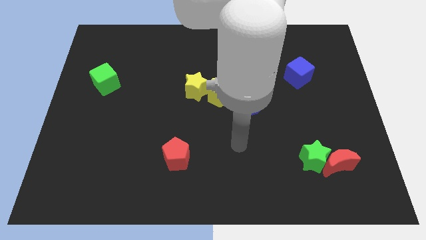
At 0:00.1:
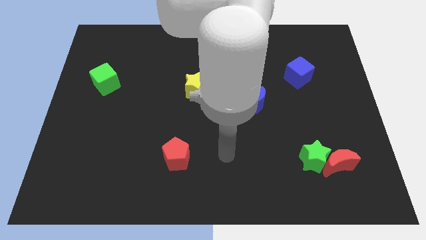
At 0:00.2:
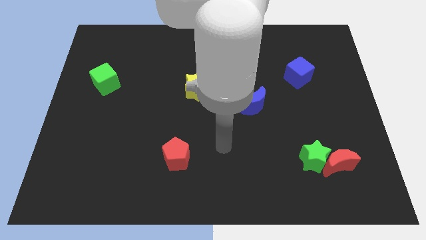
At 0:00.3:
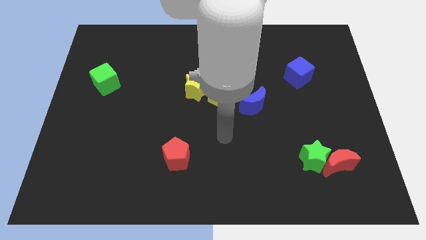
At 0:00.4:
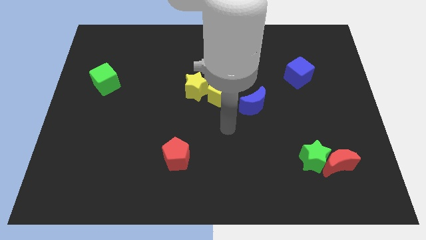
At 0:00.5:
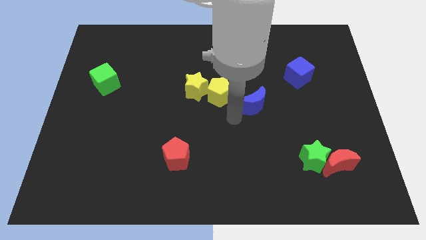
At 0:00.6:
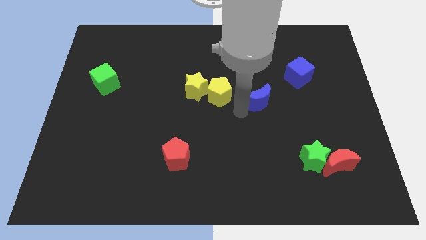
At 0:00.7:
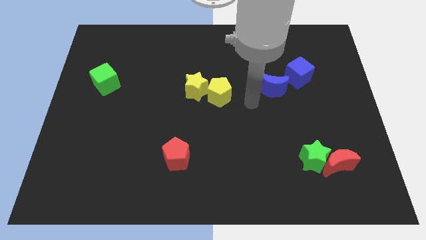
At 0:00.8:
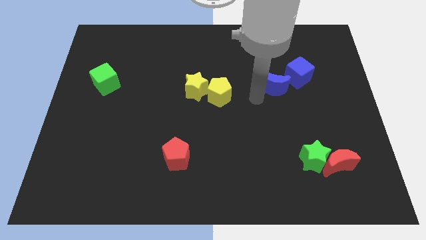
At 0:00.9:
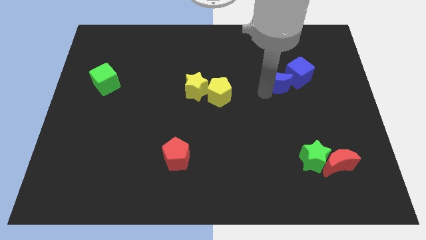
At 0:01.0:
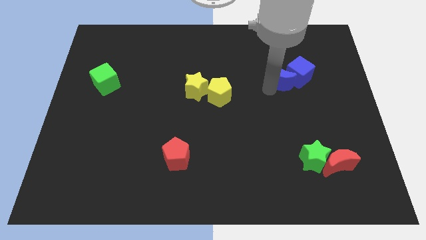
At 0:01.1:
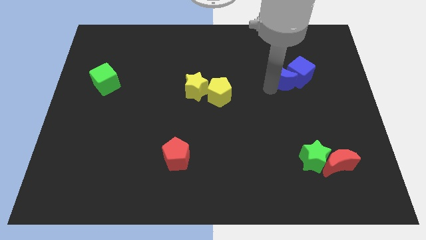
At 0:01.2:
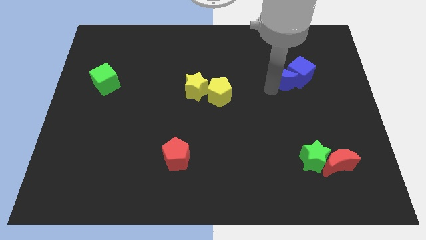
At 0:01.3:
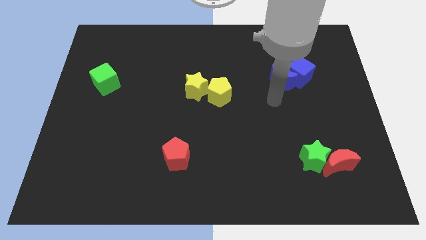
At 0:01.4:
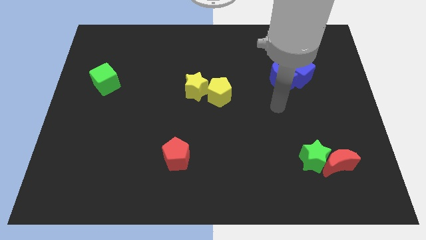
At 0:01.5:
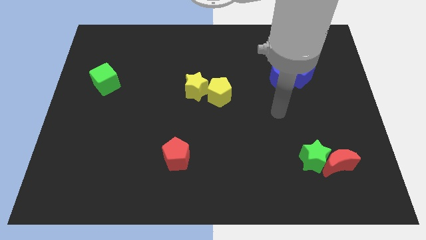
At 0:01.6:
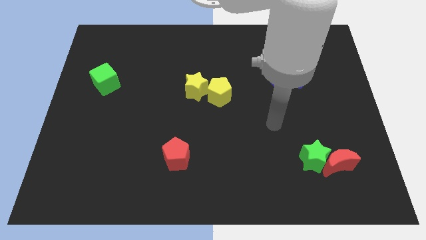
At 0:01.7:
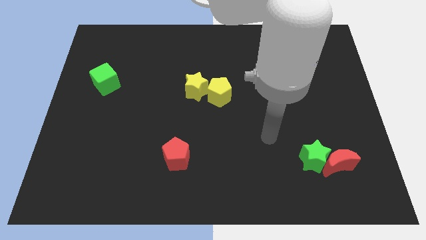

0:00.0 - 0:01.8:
push the blue moon into the blue cube

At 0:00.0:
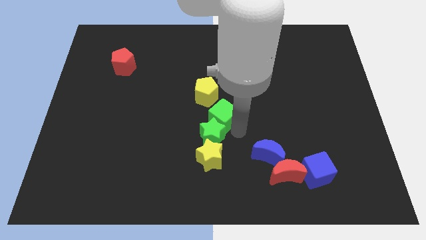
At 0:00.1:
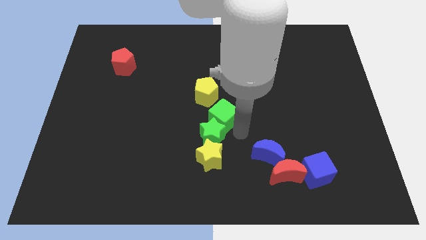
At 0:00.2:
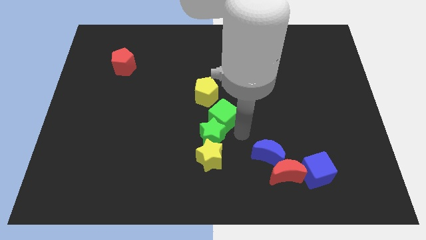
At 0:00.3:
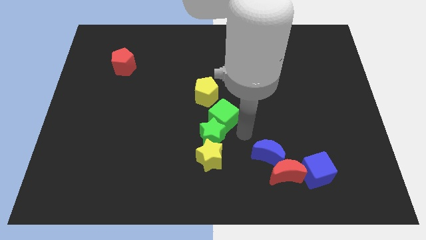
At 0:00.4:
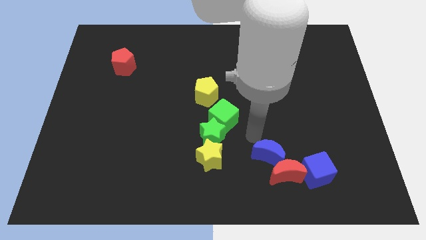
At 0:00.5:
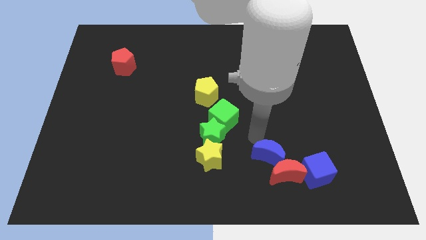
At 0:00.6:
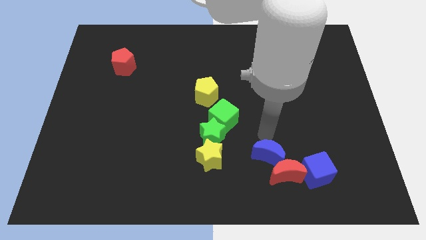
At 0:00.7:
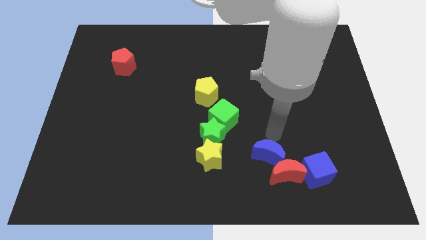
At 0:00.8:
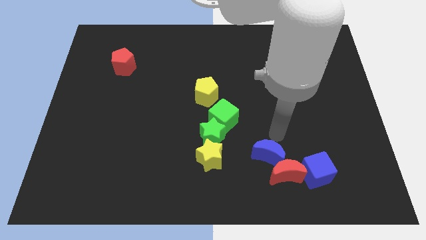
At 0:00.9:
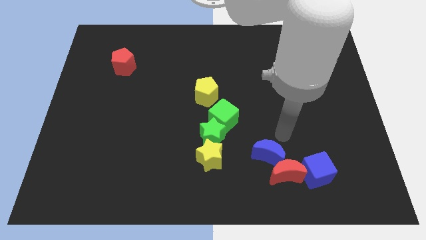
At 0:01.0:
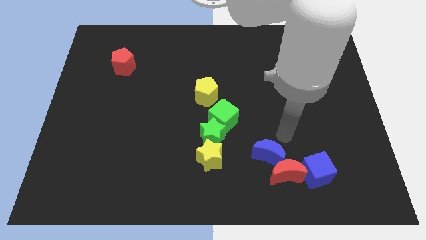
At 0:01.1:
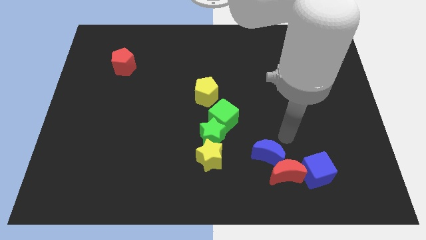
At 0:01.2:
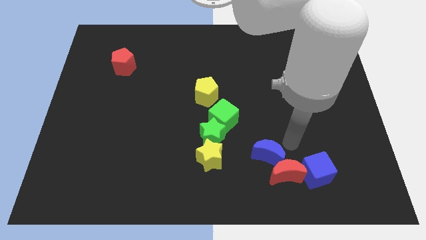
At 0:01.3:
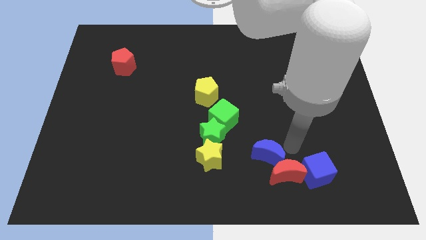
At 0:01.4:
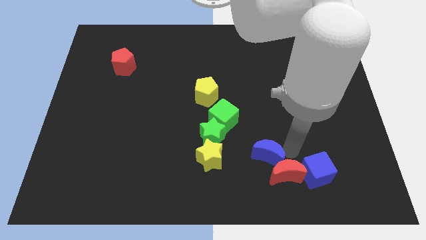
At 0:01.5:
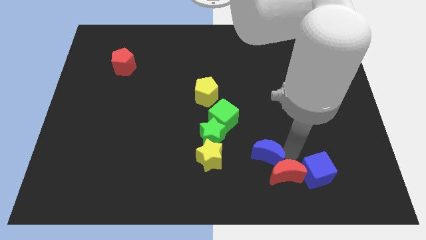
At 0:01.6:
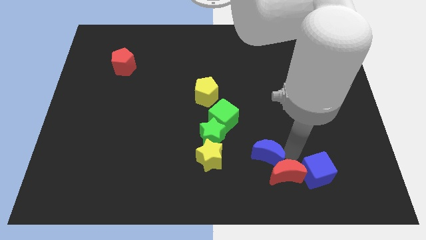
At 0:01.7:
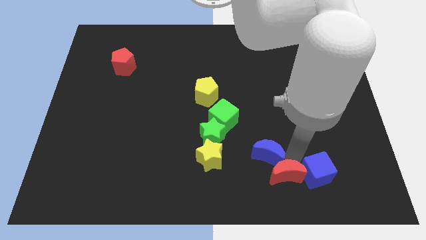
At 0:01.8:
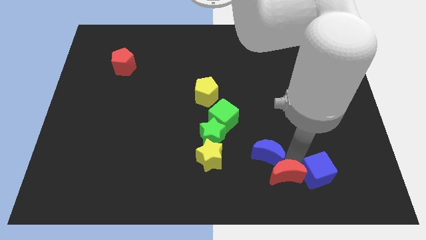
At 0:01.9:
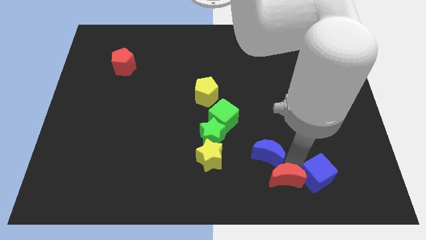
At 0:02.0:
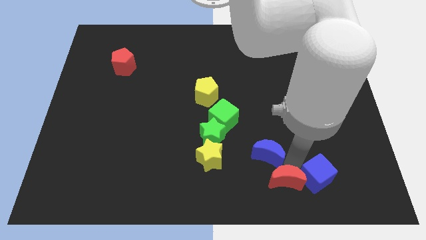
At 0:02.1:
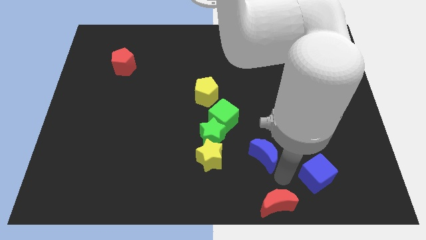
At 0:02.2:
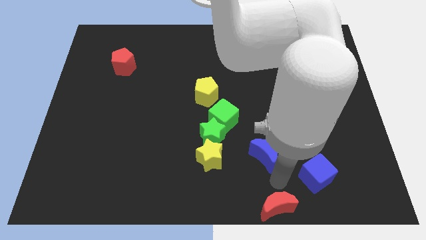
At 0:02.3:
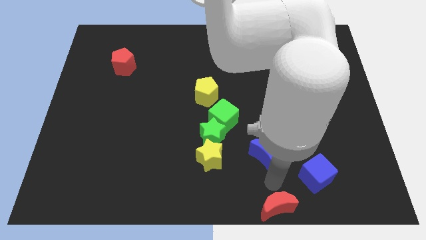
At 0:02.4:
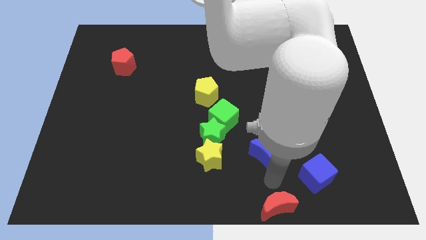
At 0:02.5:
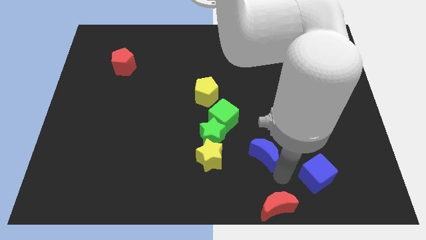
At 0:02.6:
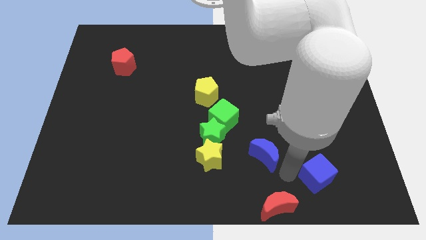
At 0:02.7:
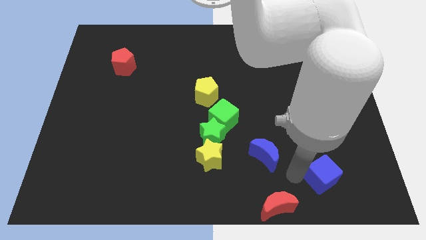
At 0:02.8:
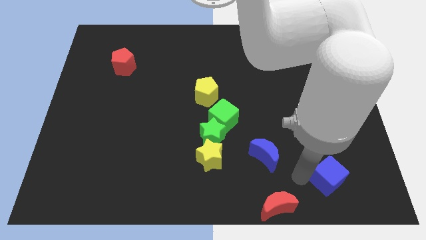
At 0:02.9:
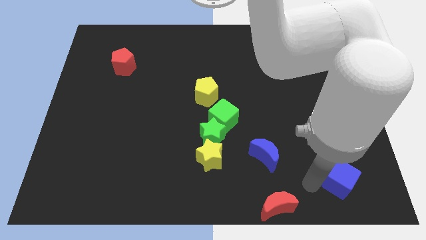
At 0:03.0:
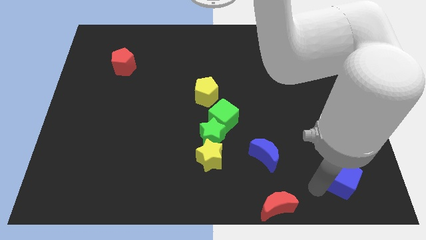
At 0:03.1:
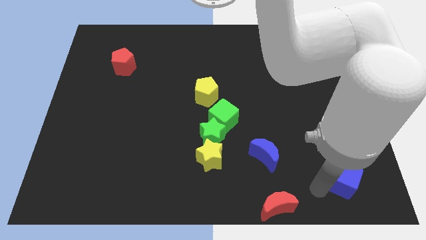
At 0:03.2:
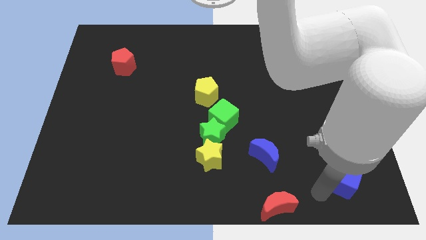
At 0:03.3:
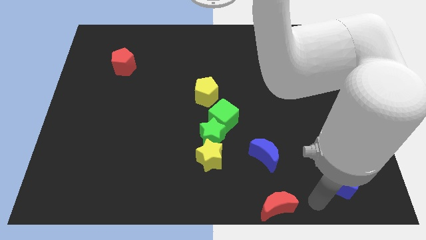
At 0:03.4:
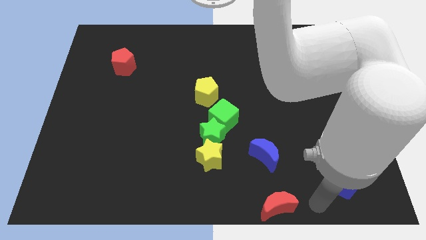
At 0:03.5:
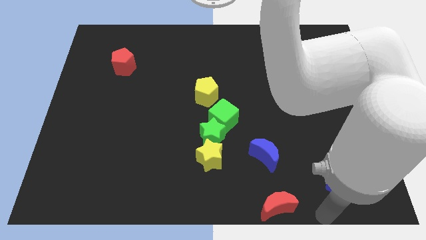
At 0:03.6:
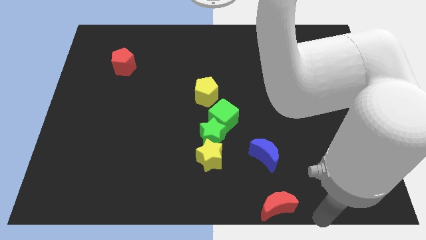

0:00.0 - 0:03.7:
separate the group of blocks at the bottom right of the table

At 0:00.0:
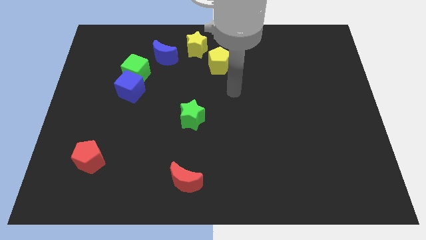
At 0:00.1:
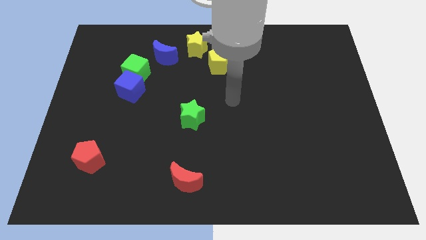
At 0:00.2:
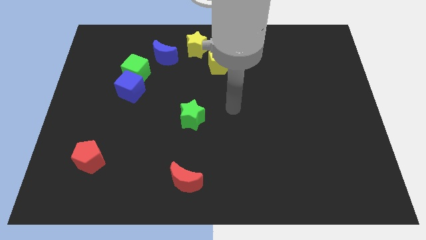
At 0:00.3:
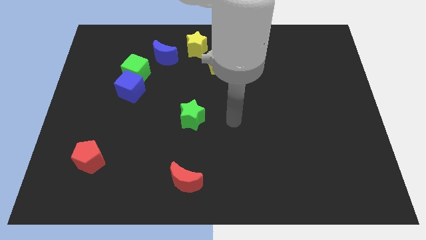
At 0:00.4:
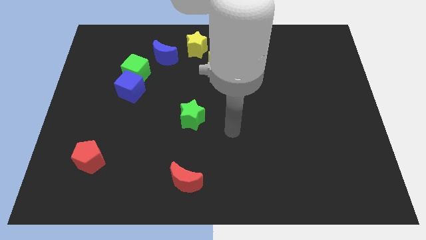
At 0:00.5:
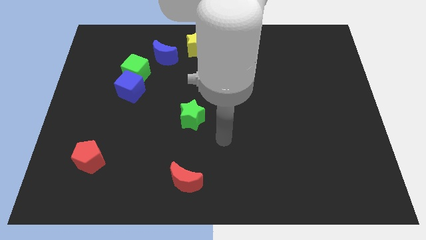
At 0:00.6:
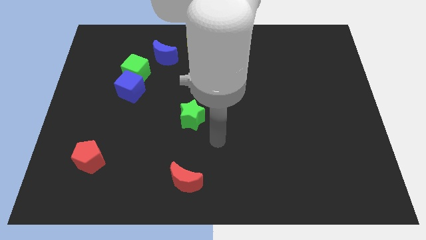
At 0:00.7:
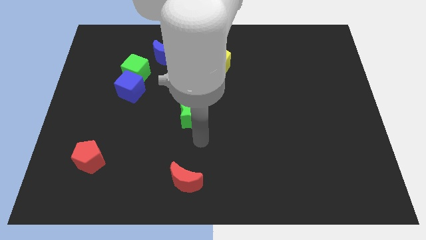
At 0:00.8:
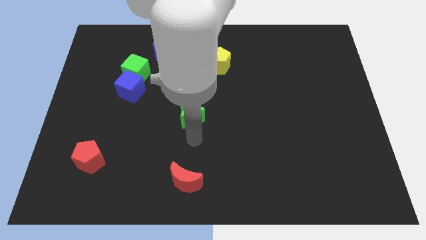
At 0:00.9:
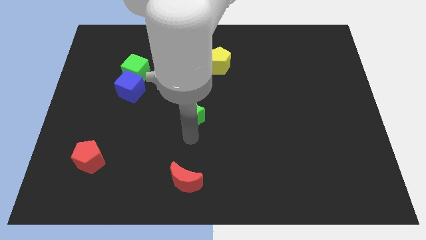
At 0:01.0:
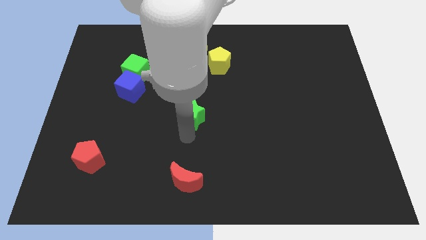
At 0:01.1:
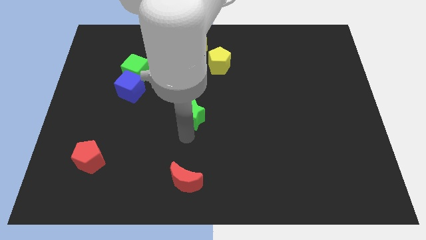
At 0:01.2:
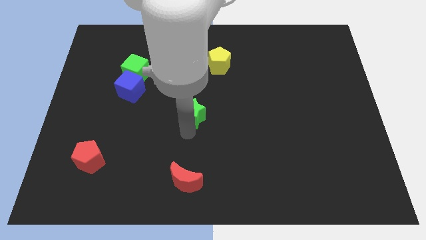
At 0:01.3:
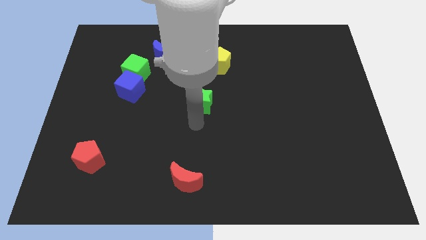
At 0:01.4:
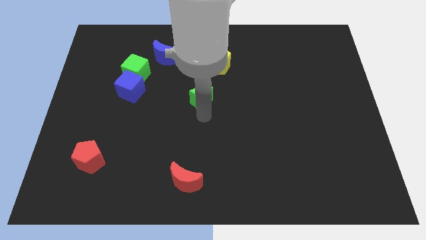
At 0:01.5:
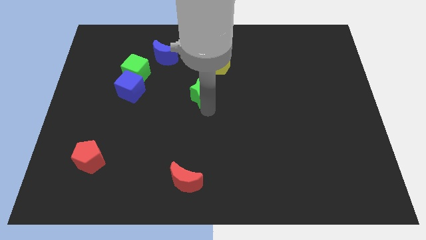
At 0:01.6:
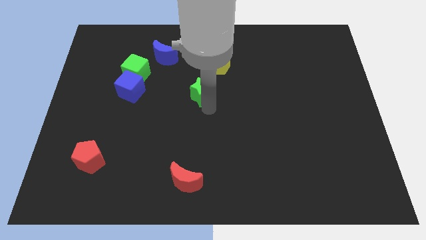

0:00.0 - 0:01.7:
push the green star parallel right to the blue cube

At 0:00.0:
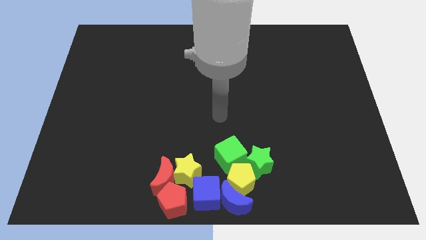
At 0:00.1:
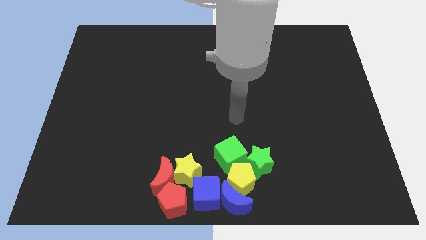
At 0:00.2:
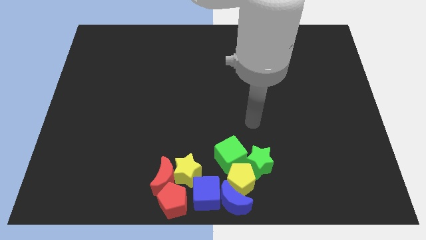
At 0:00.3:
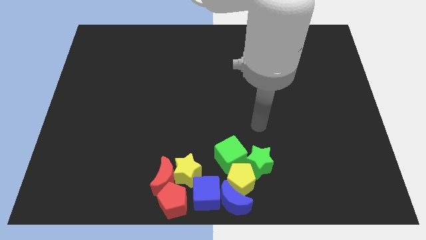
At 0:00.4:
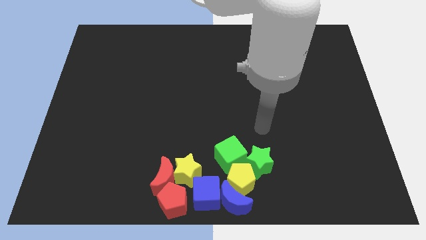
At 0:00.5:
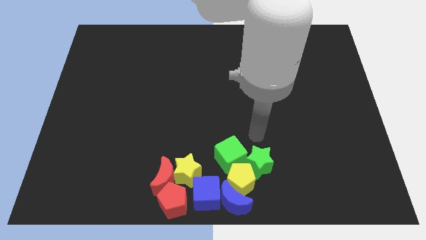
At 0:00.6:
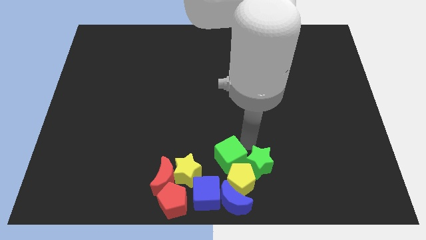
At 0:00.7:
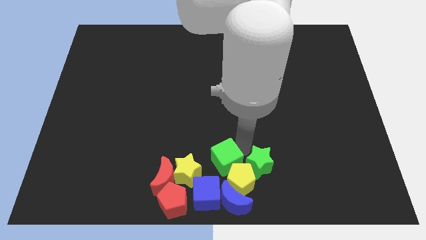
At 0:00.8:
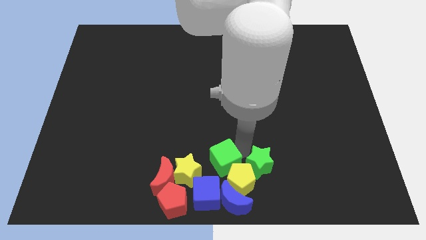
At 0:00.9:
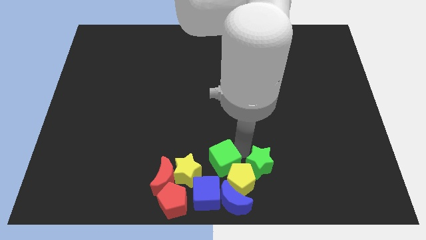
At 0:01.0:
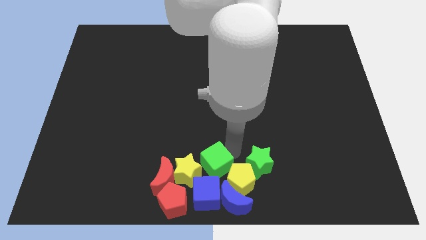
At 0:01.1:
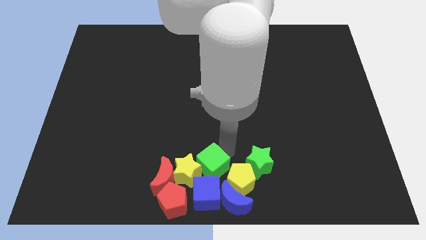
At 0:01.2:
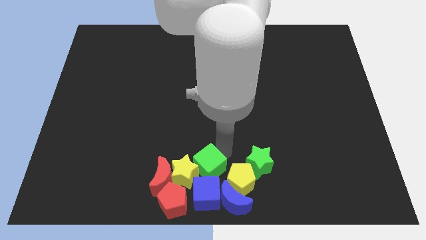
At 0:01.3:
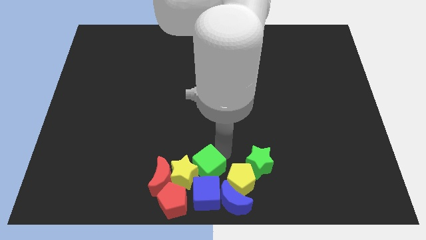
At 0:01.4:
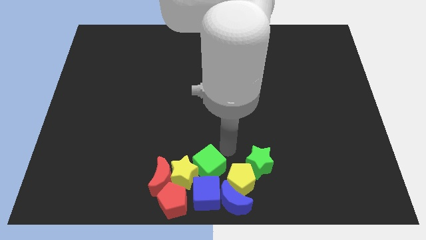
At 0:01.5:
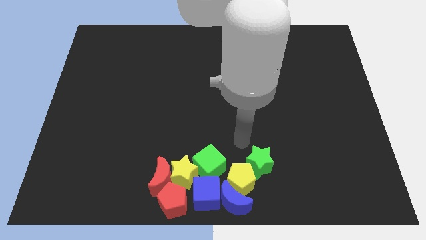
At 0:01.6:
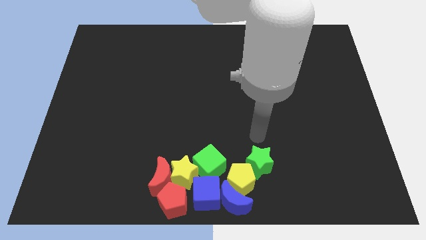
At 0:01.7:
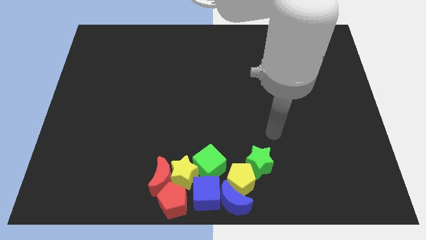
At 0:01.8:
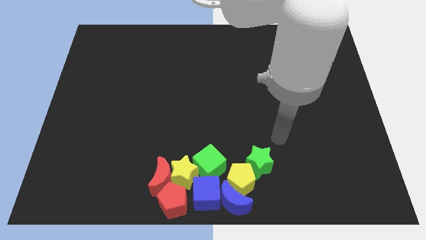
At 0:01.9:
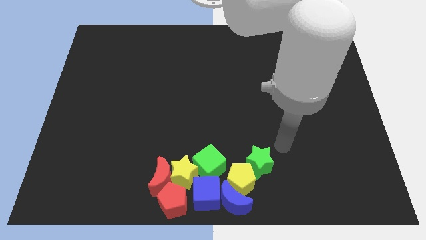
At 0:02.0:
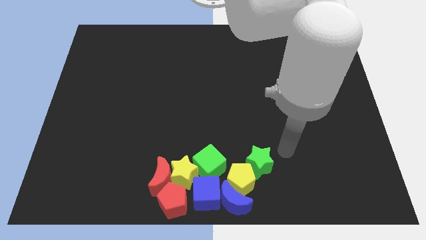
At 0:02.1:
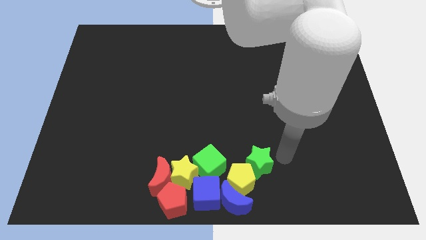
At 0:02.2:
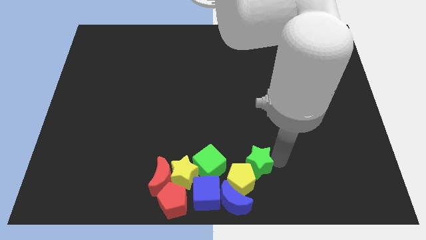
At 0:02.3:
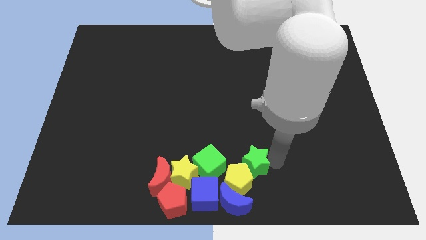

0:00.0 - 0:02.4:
move green cube into yellow star
